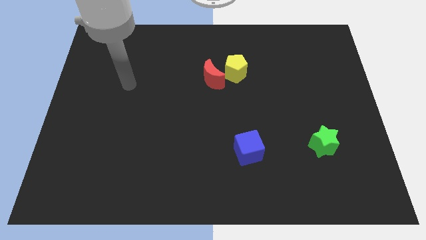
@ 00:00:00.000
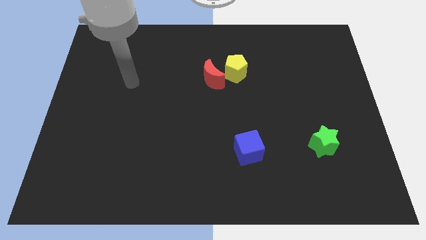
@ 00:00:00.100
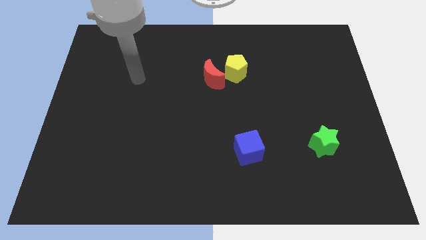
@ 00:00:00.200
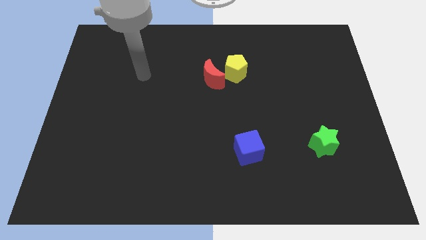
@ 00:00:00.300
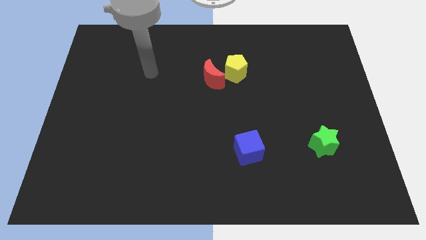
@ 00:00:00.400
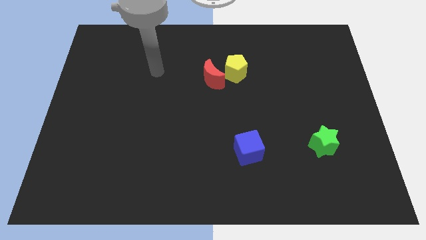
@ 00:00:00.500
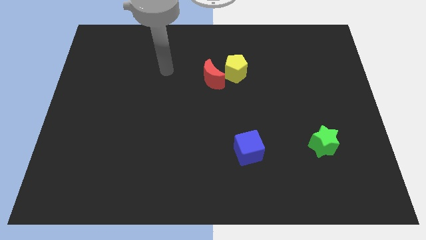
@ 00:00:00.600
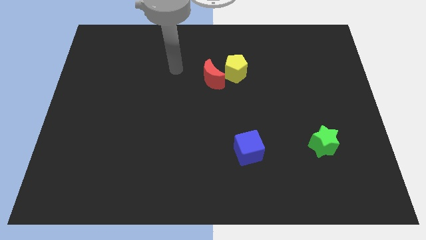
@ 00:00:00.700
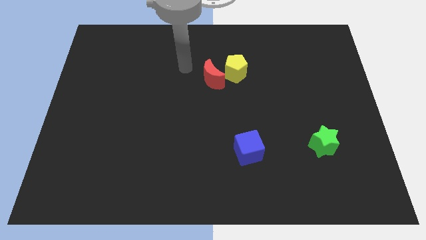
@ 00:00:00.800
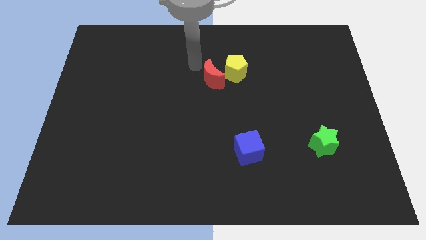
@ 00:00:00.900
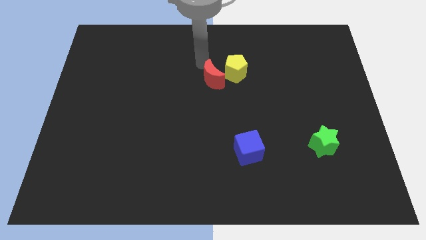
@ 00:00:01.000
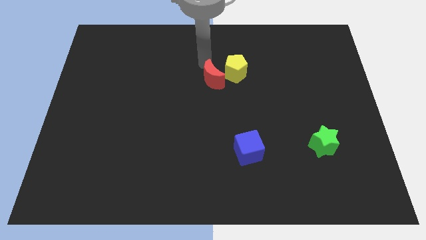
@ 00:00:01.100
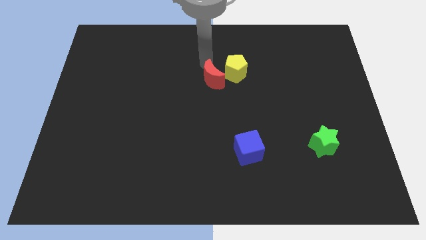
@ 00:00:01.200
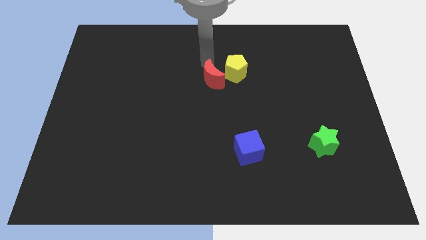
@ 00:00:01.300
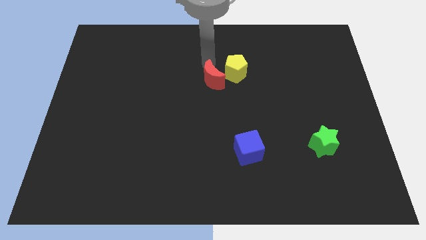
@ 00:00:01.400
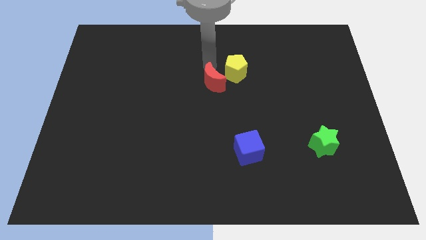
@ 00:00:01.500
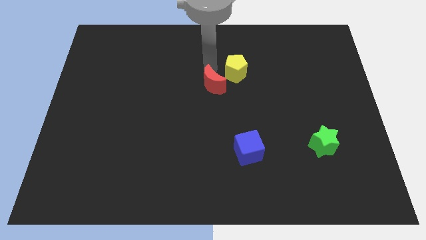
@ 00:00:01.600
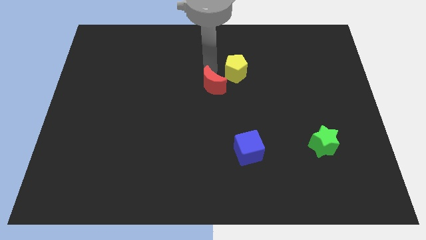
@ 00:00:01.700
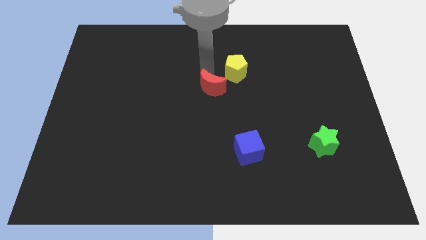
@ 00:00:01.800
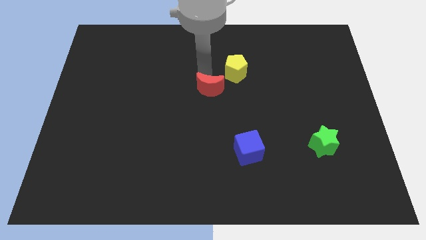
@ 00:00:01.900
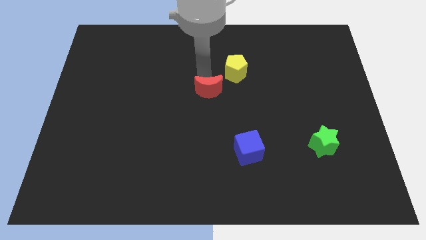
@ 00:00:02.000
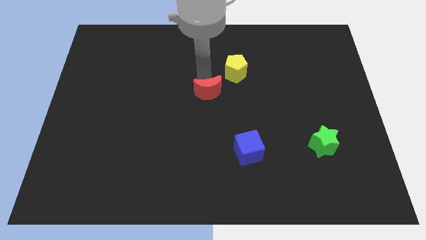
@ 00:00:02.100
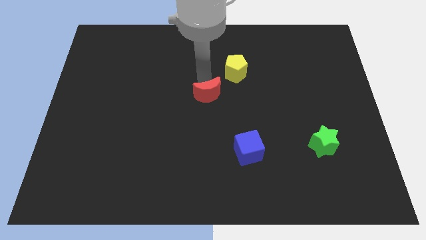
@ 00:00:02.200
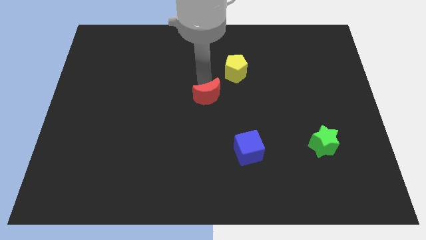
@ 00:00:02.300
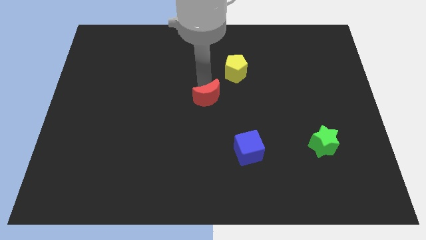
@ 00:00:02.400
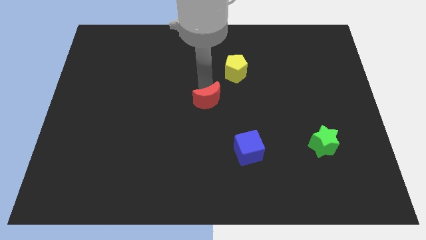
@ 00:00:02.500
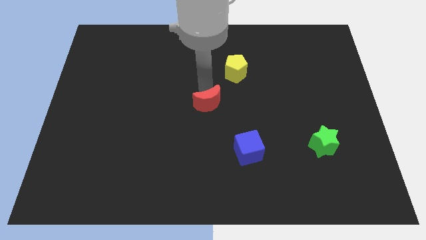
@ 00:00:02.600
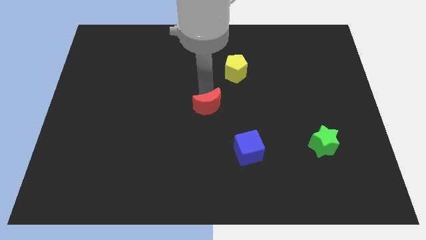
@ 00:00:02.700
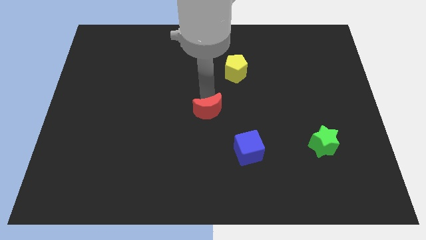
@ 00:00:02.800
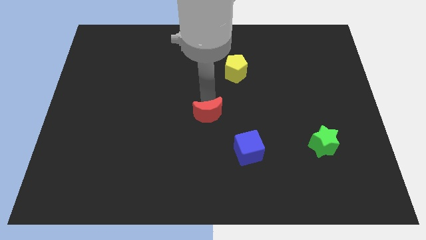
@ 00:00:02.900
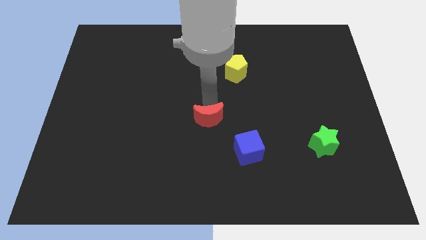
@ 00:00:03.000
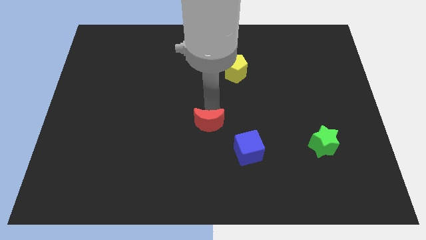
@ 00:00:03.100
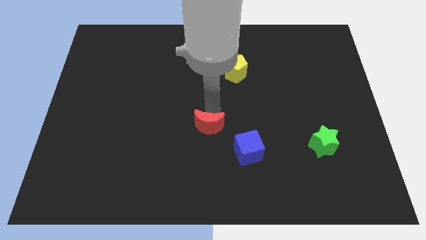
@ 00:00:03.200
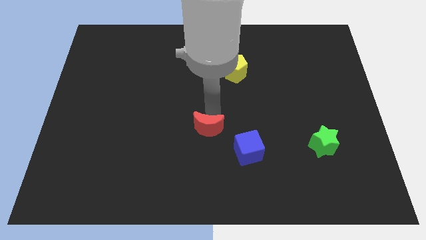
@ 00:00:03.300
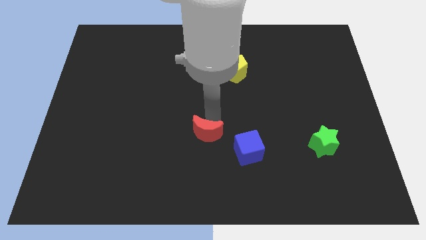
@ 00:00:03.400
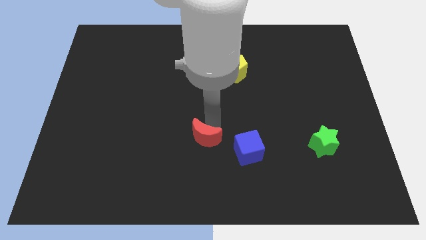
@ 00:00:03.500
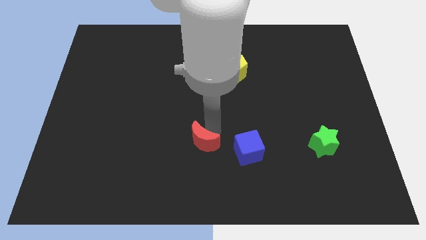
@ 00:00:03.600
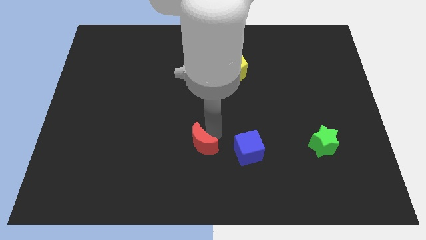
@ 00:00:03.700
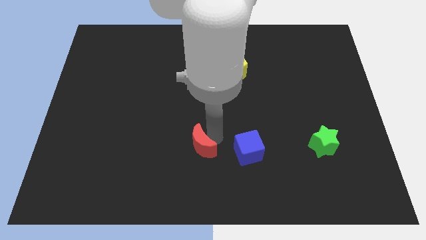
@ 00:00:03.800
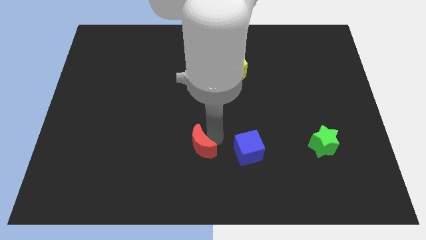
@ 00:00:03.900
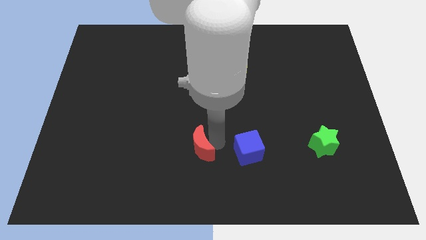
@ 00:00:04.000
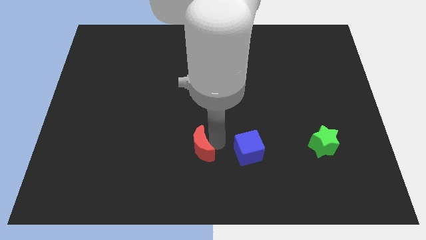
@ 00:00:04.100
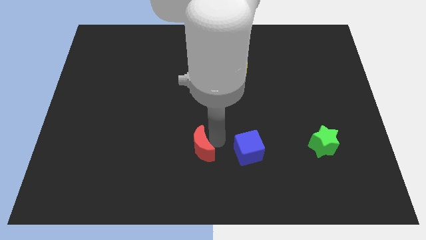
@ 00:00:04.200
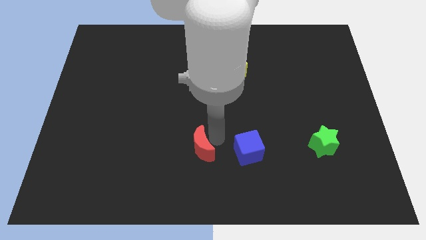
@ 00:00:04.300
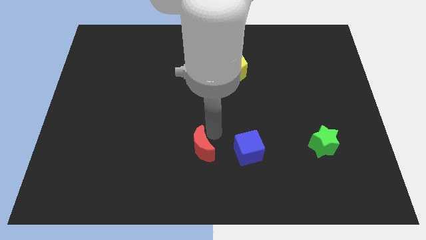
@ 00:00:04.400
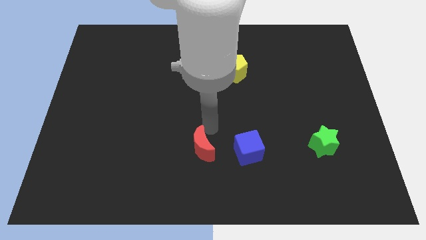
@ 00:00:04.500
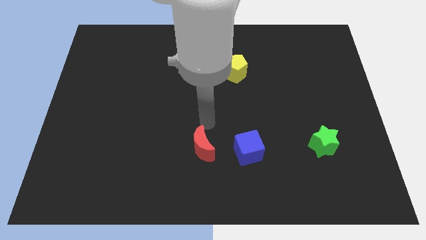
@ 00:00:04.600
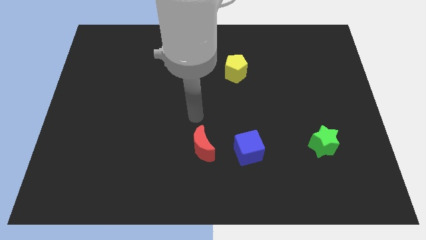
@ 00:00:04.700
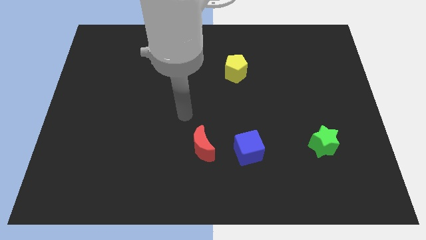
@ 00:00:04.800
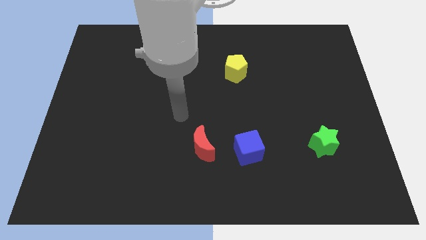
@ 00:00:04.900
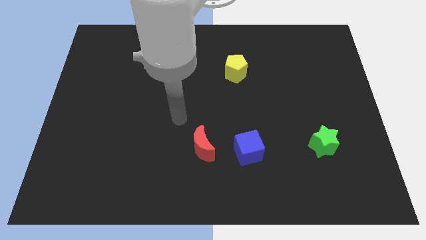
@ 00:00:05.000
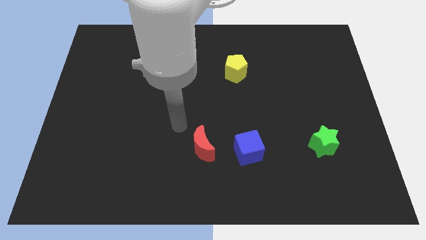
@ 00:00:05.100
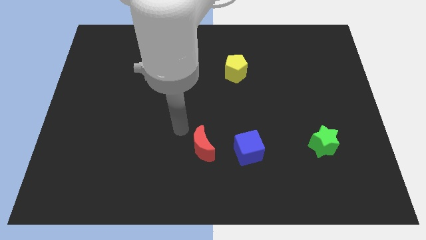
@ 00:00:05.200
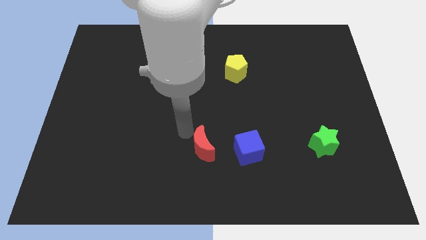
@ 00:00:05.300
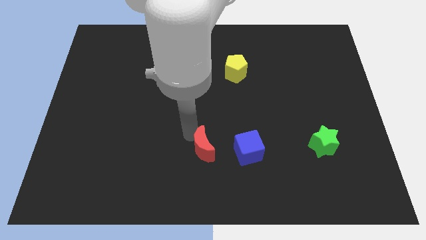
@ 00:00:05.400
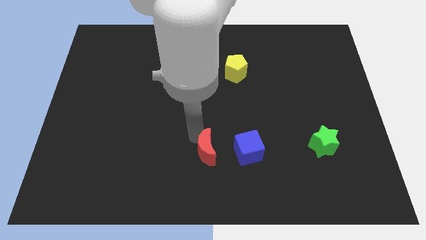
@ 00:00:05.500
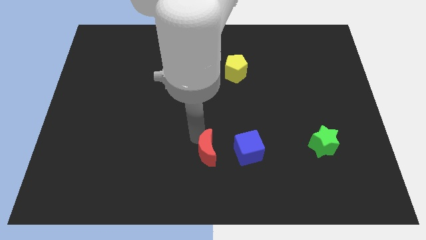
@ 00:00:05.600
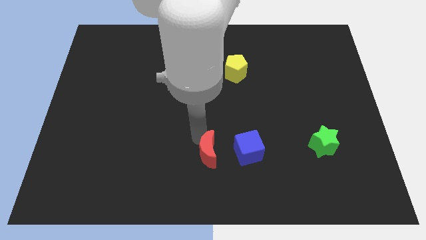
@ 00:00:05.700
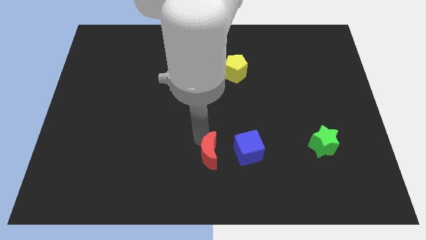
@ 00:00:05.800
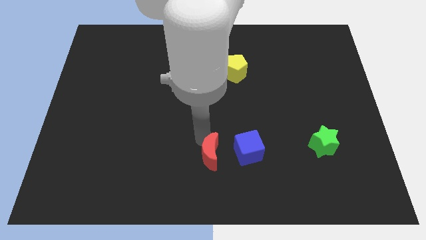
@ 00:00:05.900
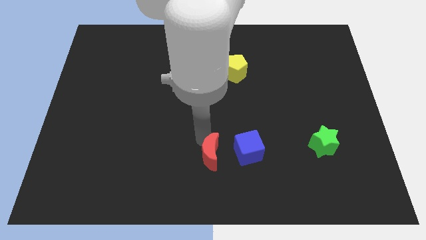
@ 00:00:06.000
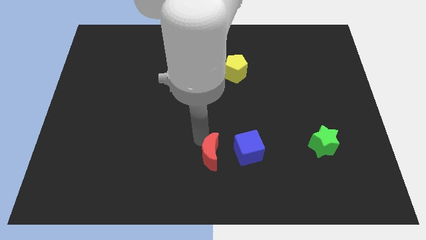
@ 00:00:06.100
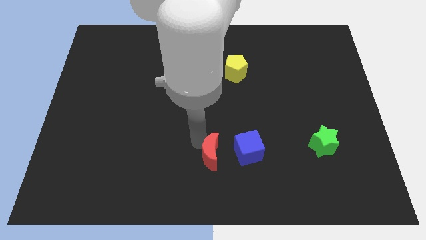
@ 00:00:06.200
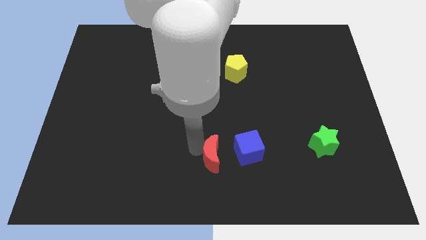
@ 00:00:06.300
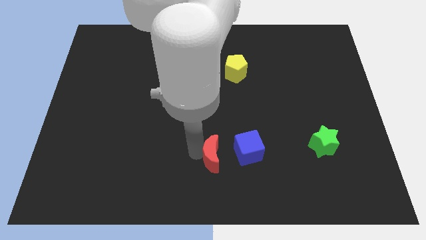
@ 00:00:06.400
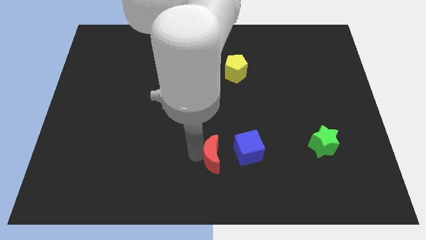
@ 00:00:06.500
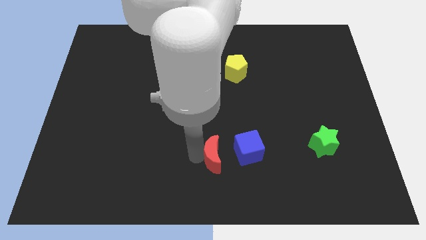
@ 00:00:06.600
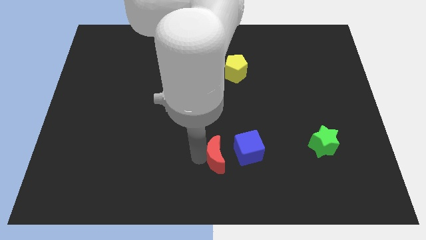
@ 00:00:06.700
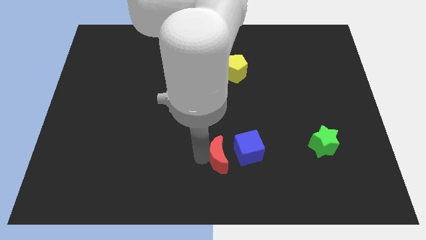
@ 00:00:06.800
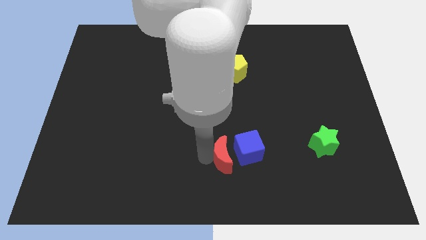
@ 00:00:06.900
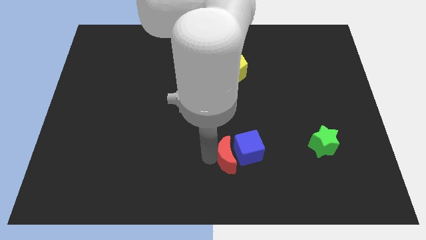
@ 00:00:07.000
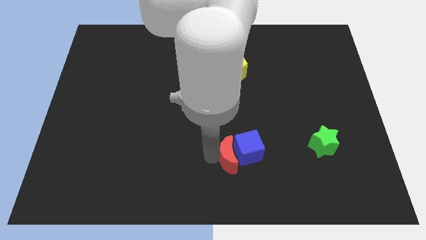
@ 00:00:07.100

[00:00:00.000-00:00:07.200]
move the red block to the cube

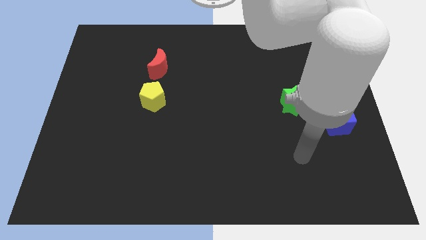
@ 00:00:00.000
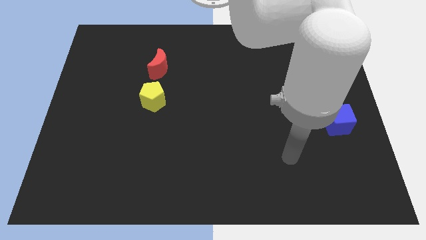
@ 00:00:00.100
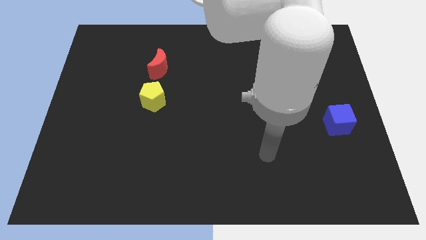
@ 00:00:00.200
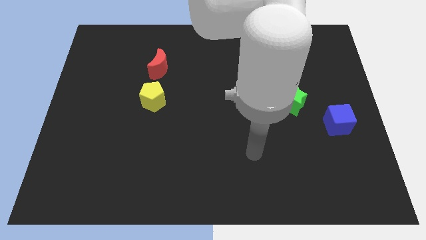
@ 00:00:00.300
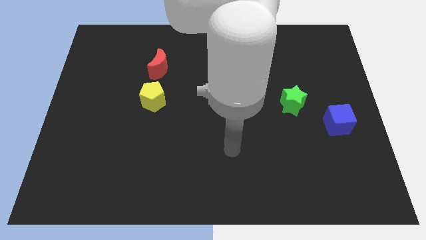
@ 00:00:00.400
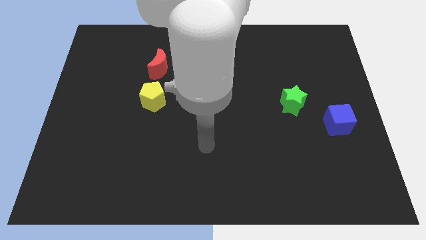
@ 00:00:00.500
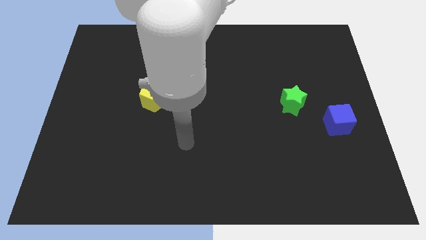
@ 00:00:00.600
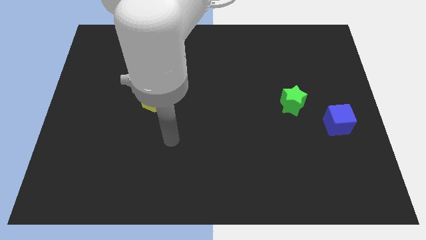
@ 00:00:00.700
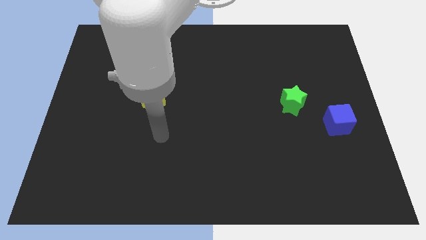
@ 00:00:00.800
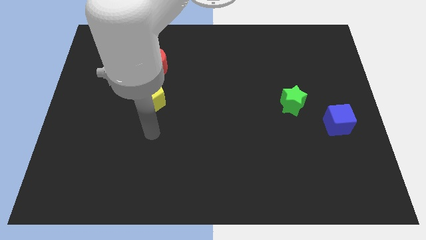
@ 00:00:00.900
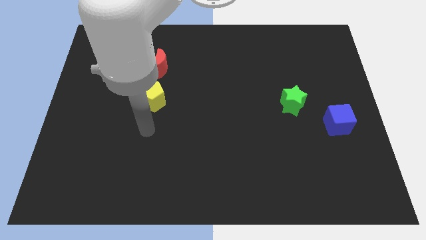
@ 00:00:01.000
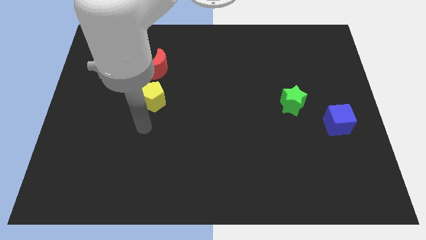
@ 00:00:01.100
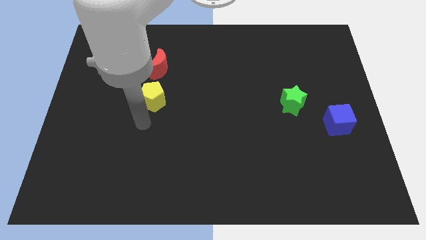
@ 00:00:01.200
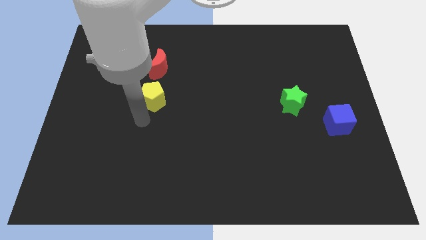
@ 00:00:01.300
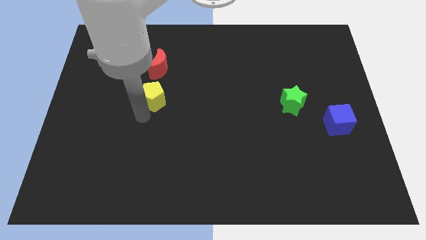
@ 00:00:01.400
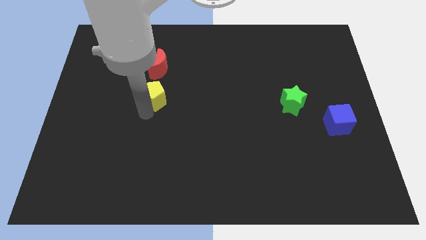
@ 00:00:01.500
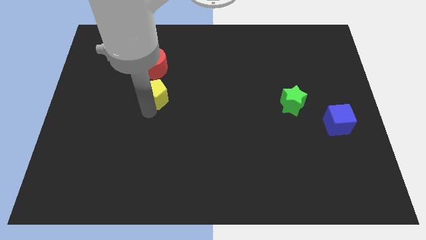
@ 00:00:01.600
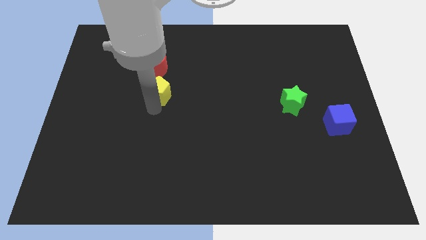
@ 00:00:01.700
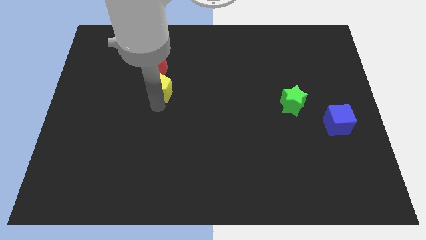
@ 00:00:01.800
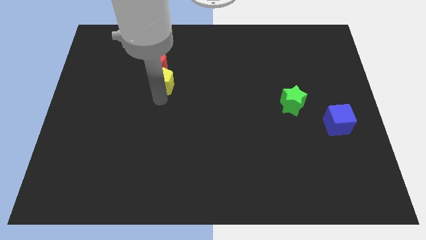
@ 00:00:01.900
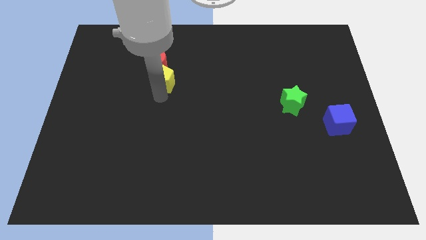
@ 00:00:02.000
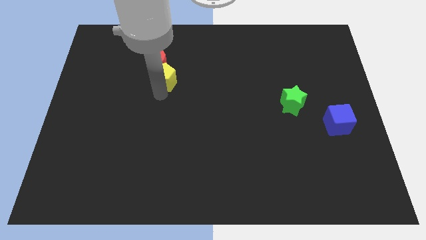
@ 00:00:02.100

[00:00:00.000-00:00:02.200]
push the pentagon towards the red moon
